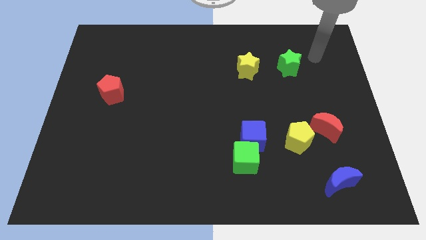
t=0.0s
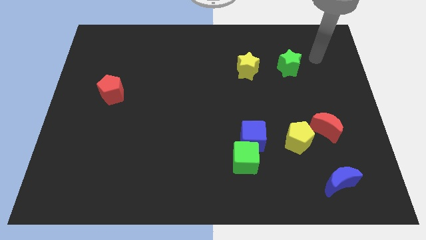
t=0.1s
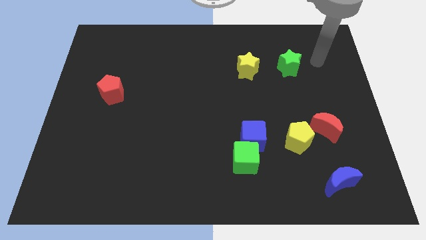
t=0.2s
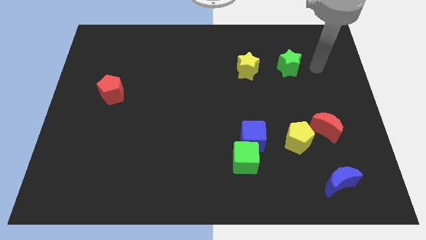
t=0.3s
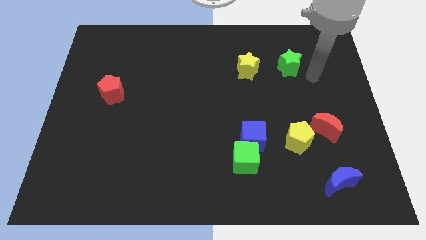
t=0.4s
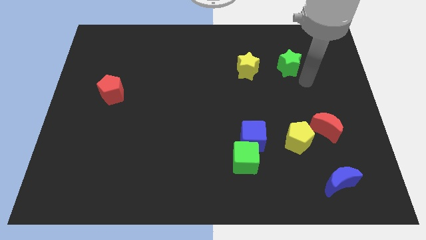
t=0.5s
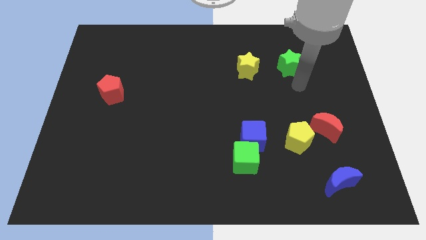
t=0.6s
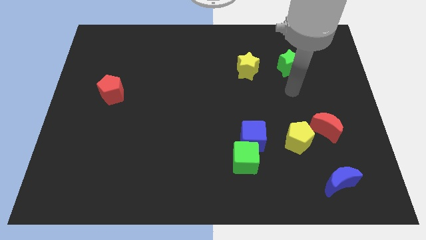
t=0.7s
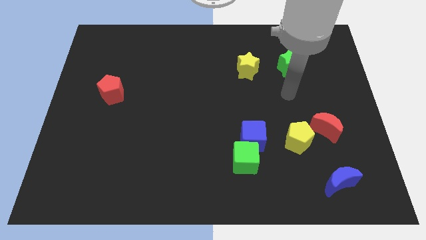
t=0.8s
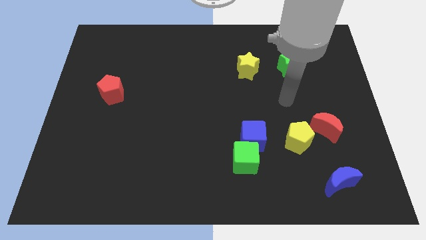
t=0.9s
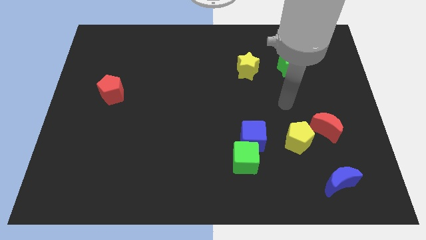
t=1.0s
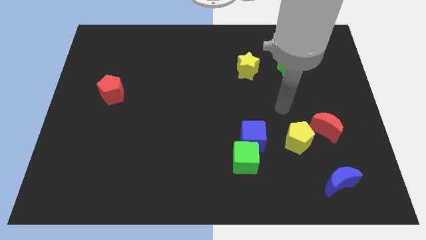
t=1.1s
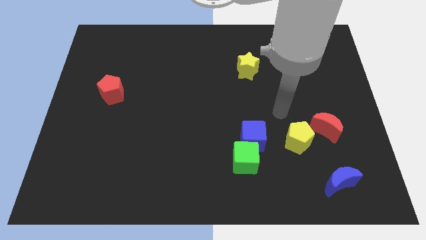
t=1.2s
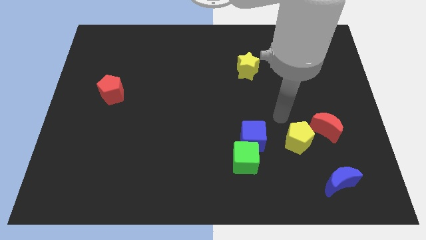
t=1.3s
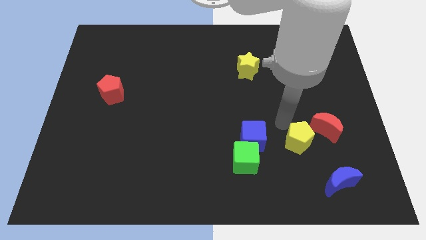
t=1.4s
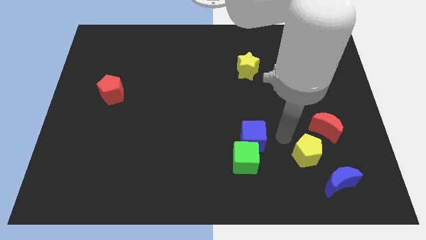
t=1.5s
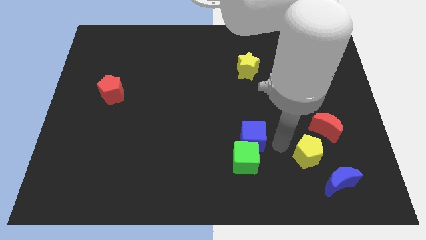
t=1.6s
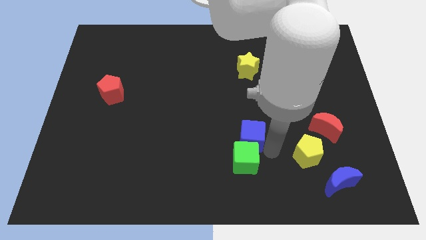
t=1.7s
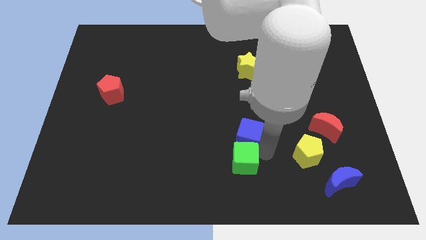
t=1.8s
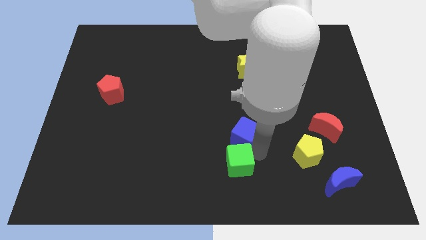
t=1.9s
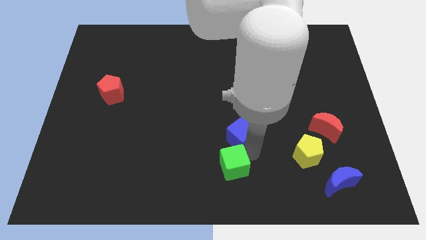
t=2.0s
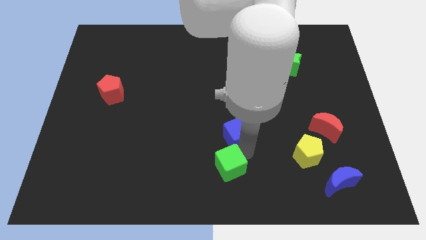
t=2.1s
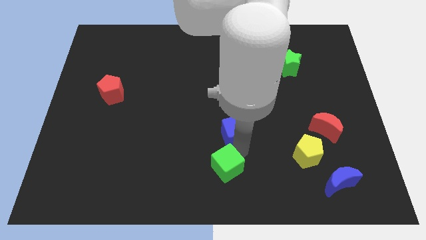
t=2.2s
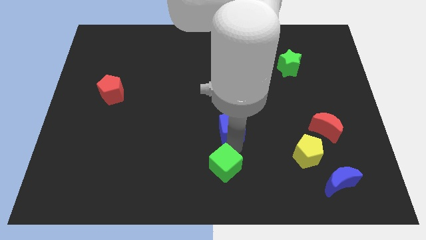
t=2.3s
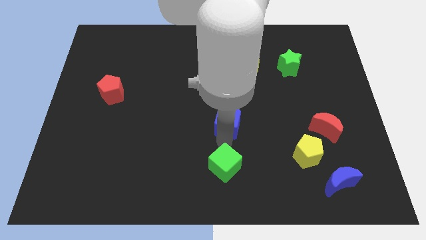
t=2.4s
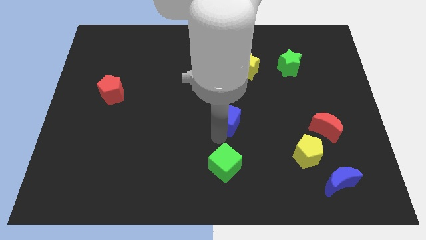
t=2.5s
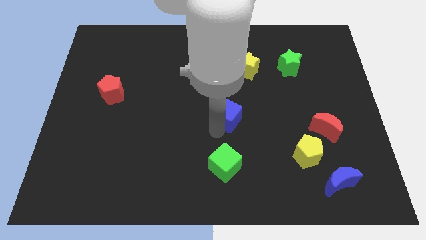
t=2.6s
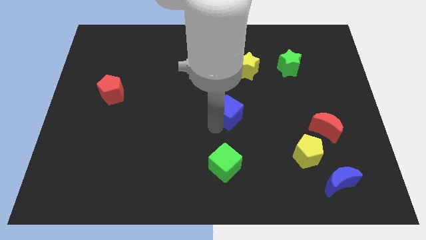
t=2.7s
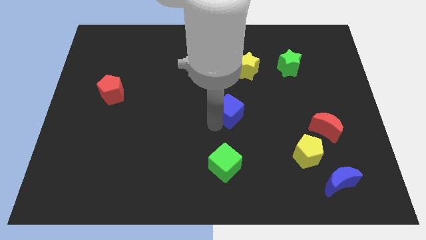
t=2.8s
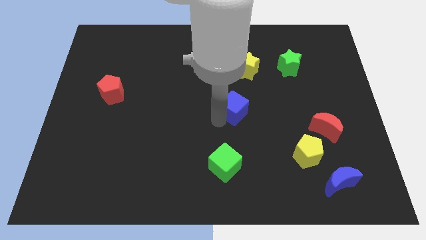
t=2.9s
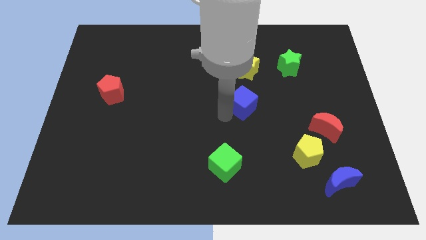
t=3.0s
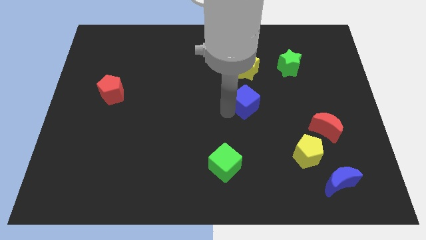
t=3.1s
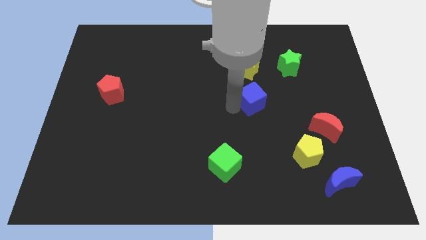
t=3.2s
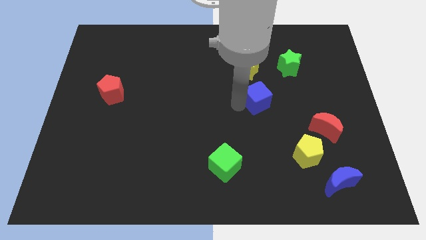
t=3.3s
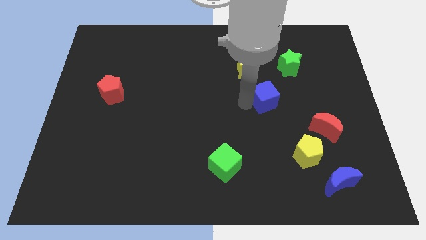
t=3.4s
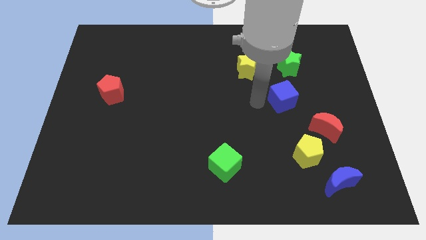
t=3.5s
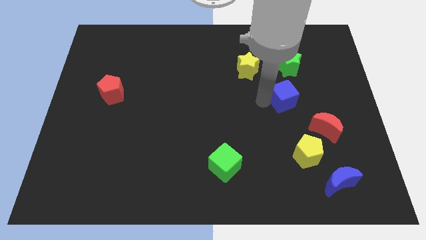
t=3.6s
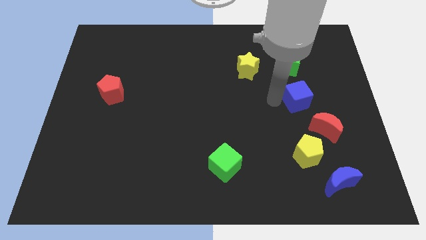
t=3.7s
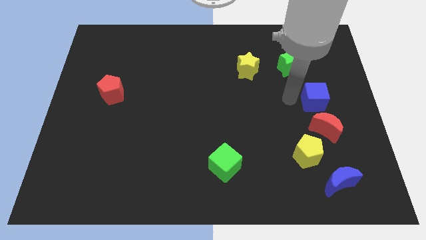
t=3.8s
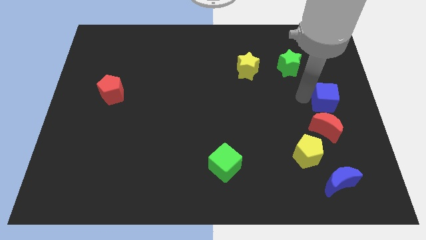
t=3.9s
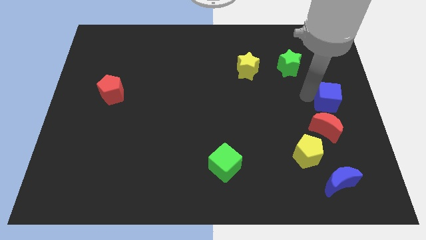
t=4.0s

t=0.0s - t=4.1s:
place blue cube above red moon

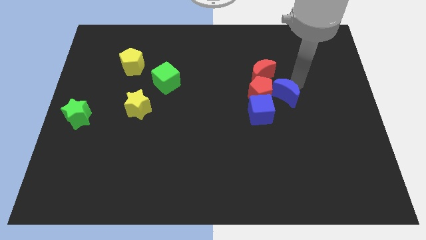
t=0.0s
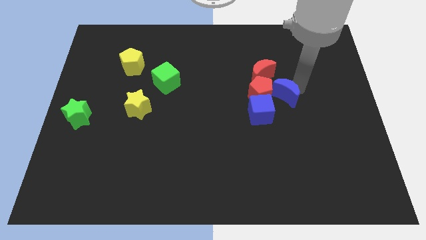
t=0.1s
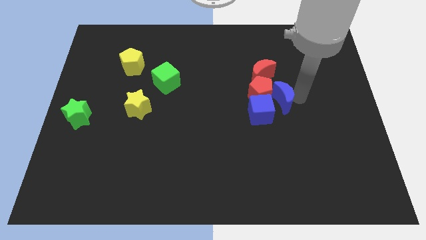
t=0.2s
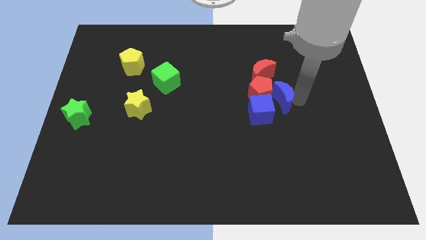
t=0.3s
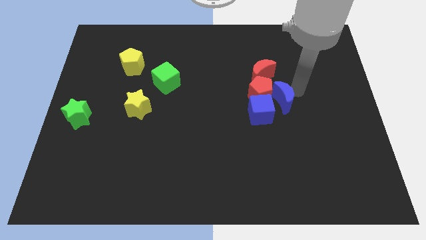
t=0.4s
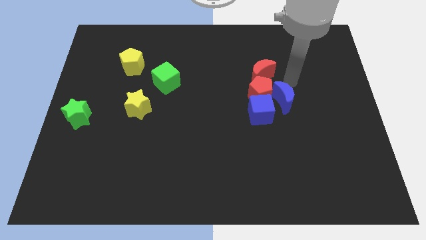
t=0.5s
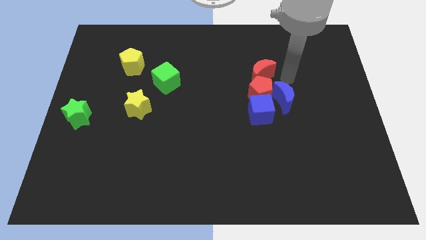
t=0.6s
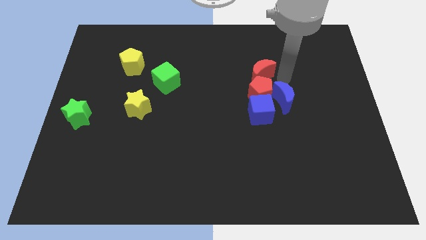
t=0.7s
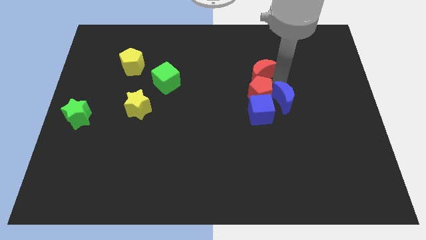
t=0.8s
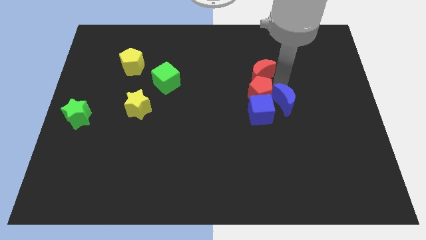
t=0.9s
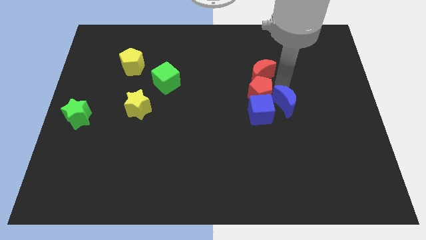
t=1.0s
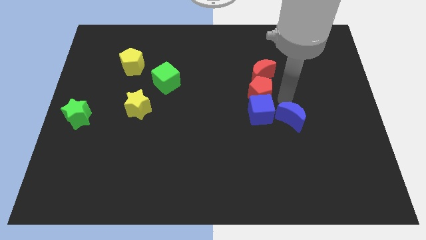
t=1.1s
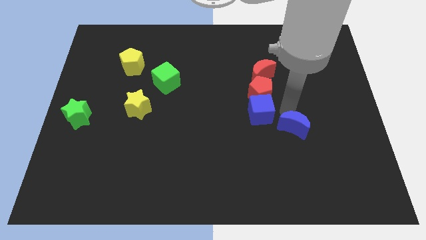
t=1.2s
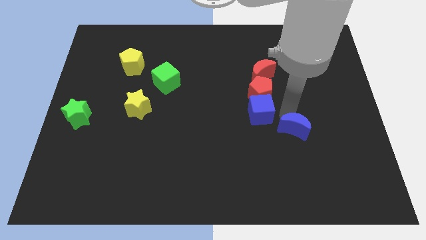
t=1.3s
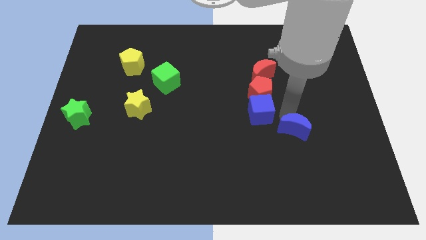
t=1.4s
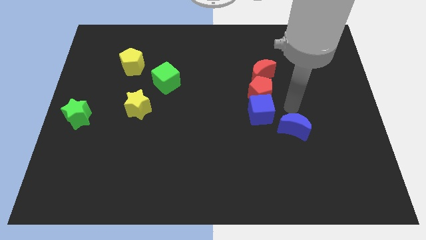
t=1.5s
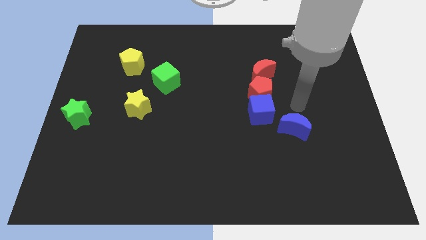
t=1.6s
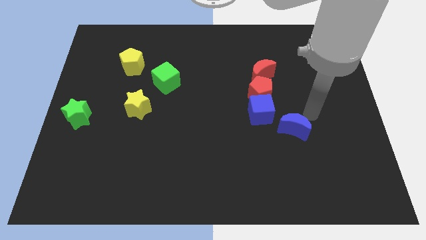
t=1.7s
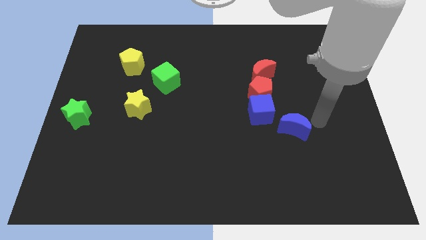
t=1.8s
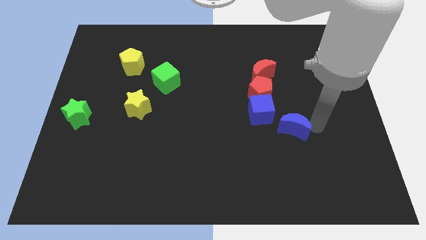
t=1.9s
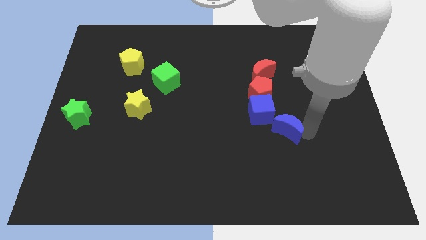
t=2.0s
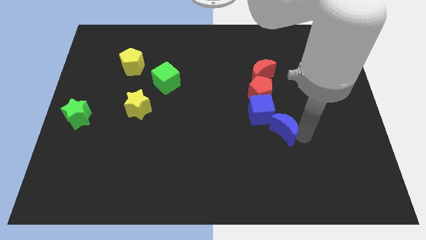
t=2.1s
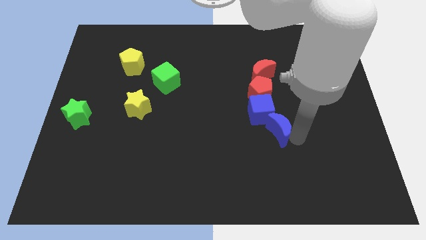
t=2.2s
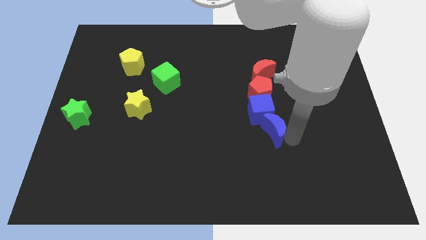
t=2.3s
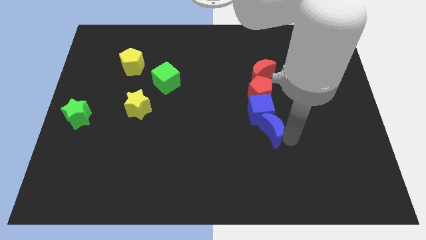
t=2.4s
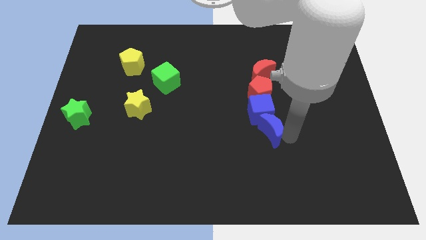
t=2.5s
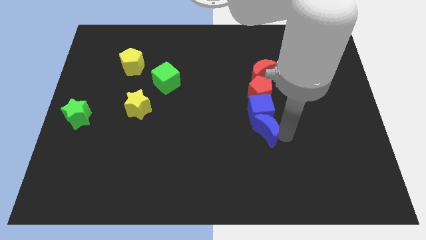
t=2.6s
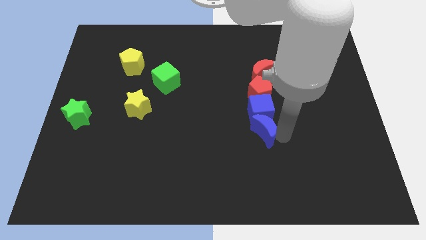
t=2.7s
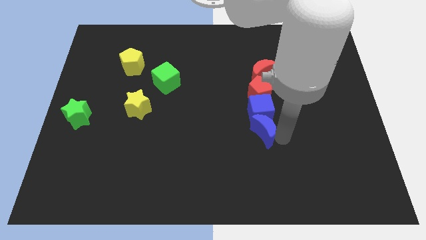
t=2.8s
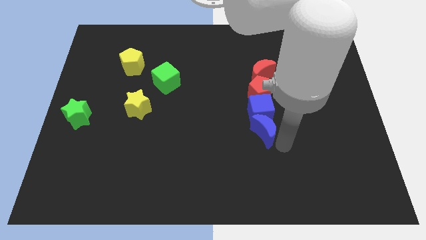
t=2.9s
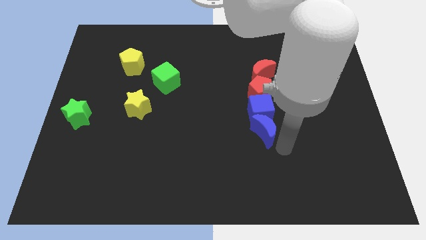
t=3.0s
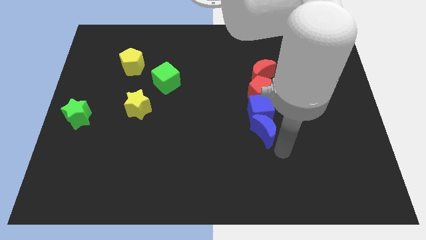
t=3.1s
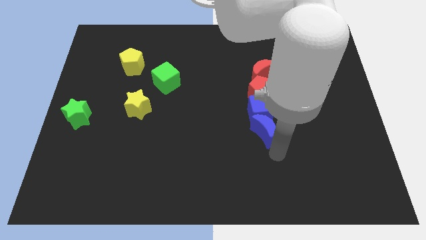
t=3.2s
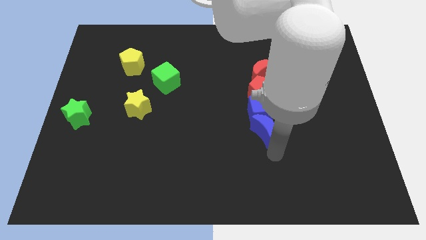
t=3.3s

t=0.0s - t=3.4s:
place the blue crescent towards the bottom of the blue cube

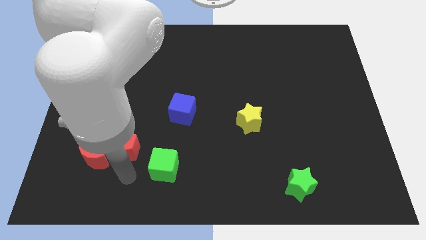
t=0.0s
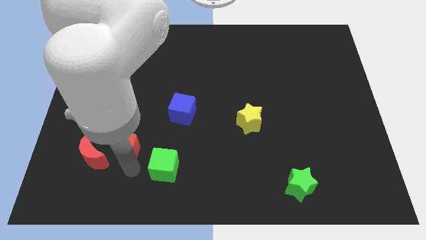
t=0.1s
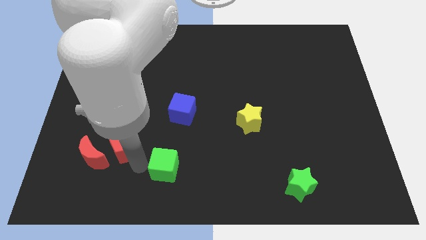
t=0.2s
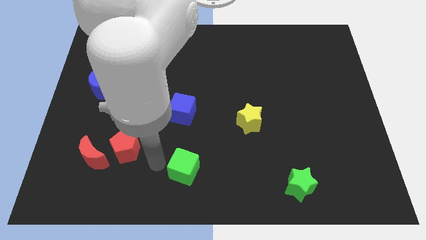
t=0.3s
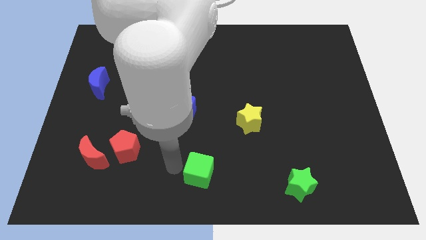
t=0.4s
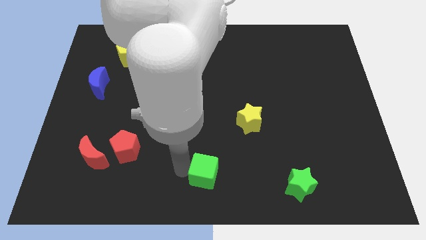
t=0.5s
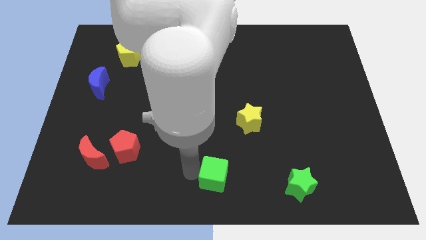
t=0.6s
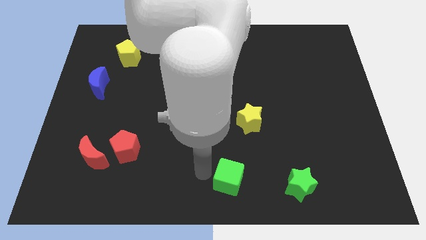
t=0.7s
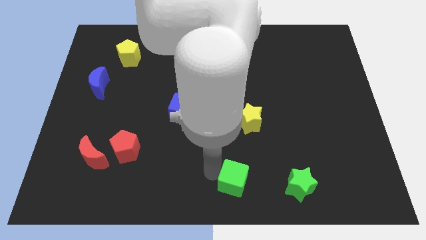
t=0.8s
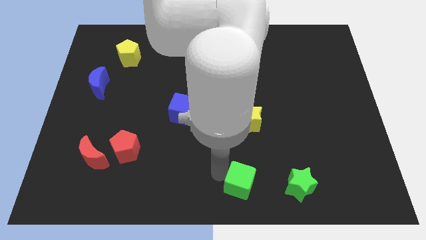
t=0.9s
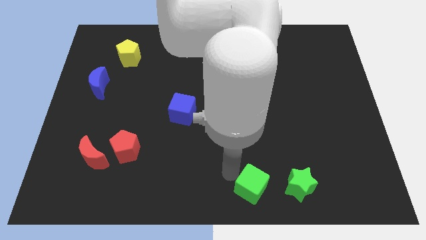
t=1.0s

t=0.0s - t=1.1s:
move the green cube towards the green star

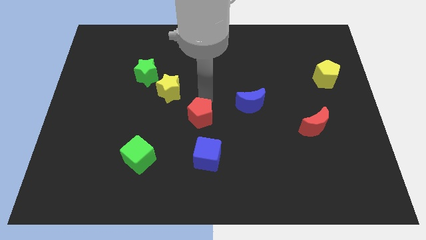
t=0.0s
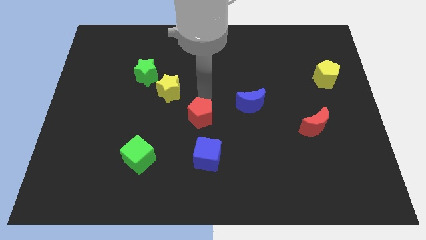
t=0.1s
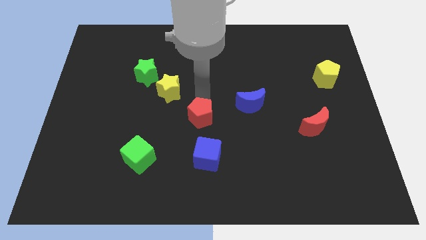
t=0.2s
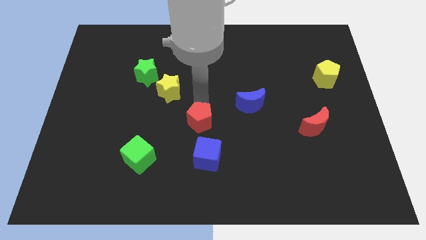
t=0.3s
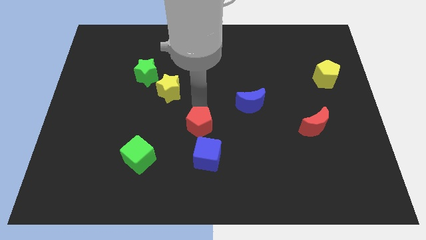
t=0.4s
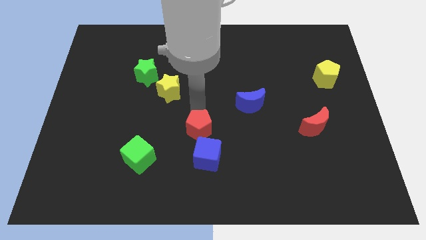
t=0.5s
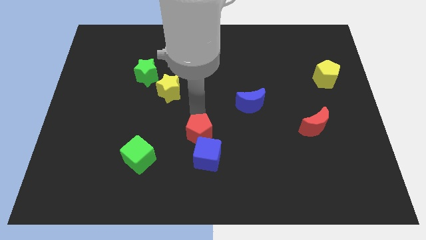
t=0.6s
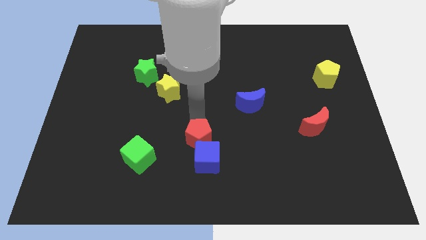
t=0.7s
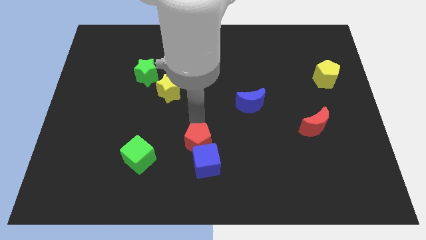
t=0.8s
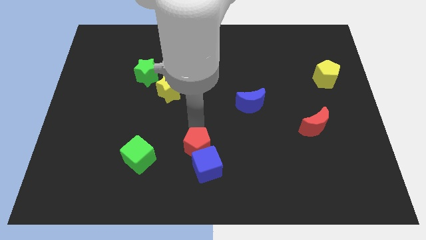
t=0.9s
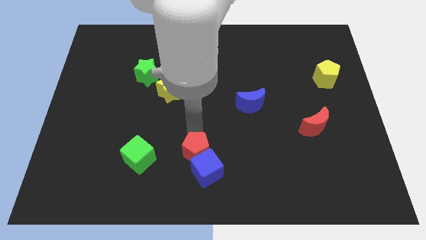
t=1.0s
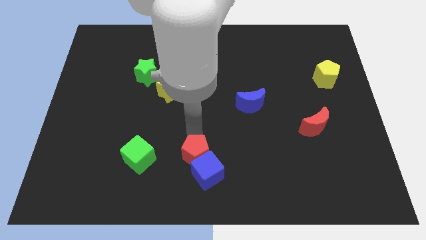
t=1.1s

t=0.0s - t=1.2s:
push the red pentagon into the blue cube
